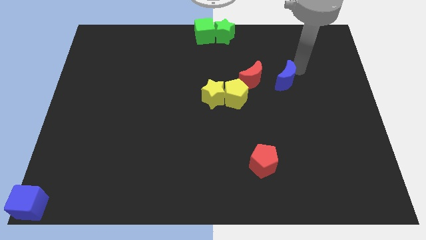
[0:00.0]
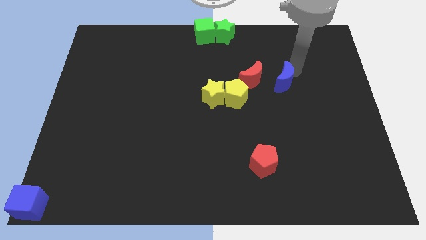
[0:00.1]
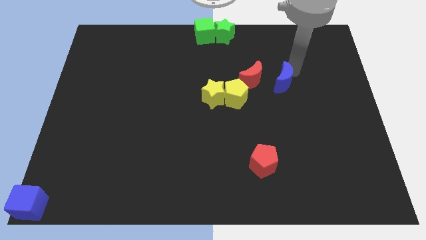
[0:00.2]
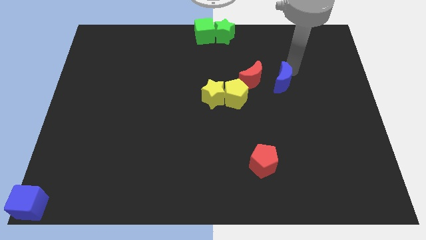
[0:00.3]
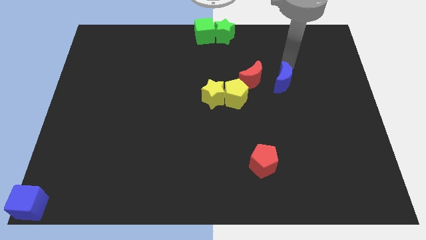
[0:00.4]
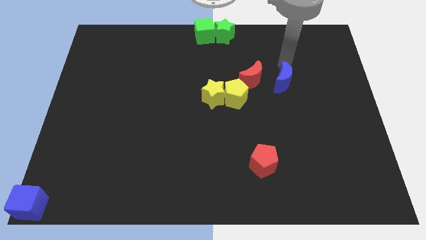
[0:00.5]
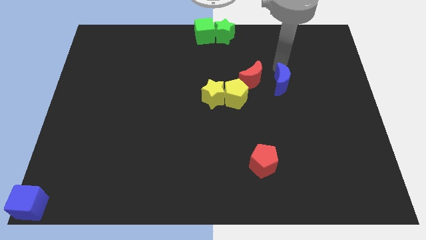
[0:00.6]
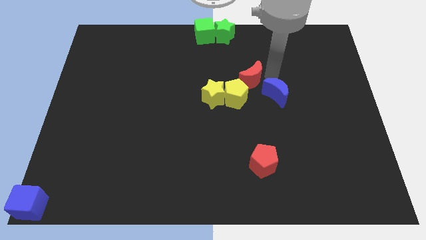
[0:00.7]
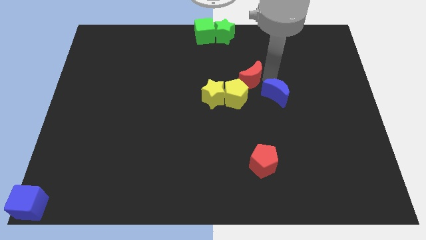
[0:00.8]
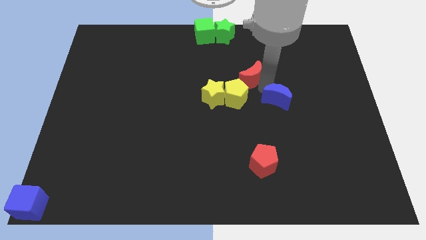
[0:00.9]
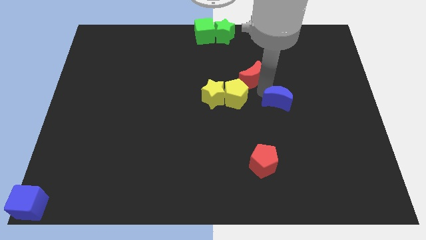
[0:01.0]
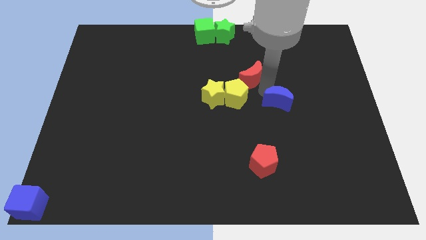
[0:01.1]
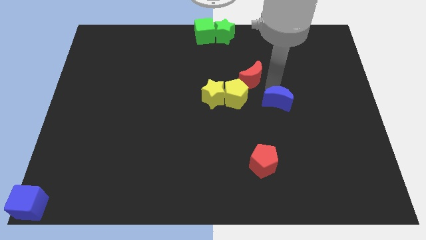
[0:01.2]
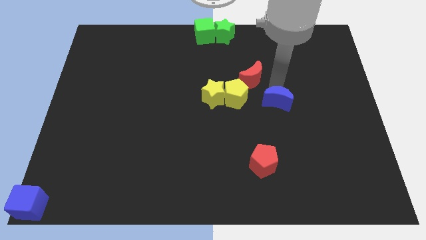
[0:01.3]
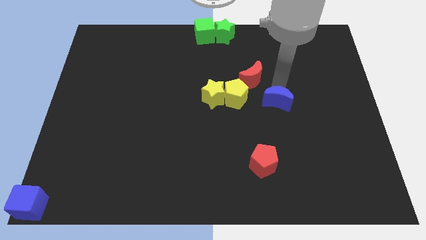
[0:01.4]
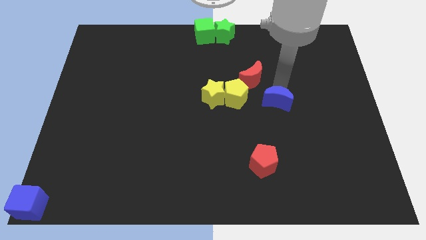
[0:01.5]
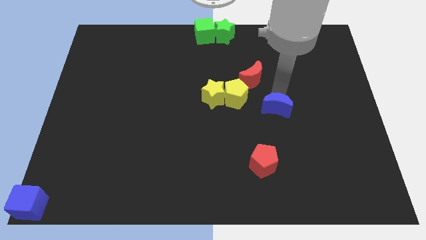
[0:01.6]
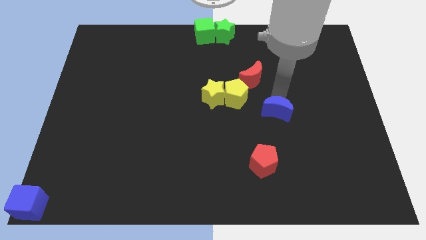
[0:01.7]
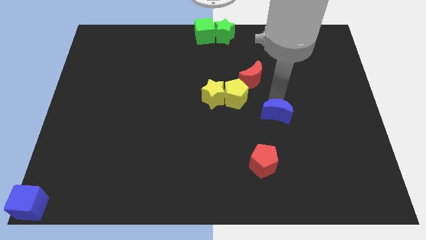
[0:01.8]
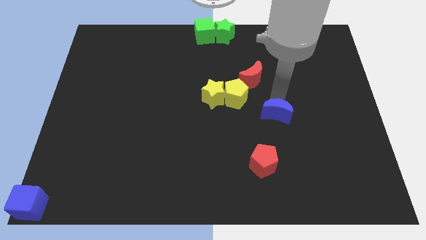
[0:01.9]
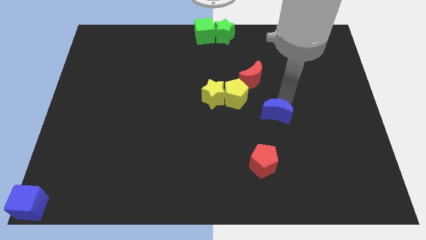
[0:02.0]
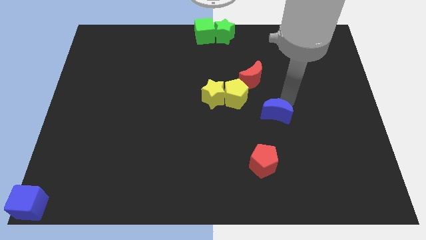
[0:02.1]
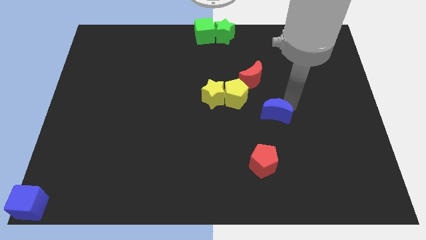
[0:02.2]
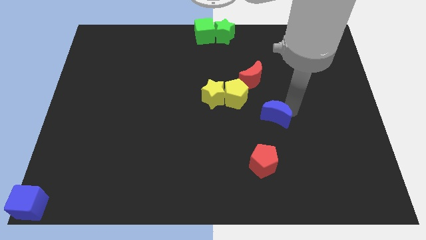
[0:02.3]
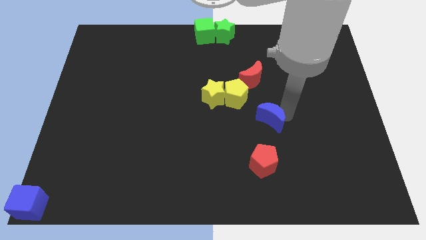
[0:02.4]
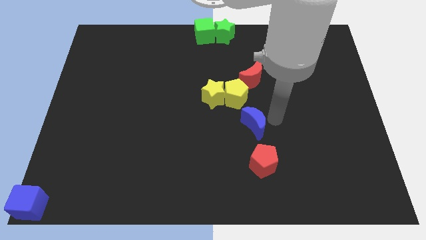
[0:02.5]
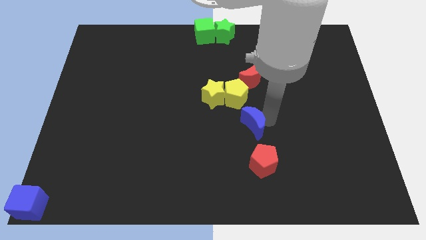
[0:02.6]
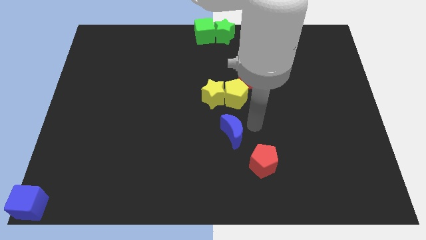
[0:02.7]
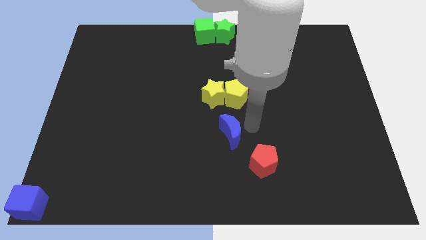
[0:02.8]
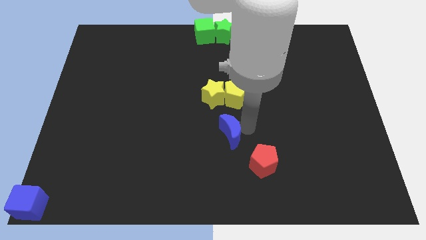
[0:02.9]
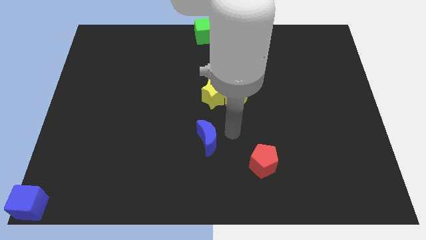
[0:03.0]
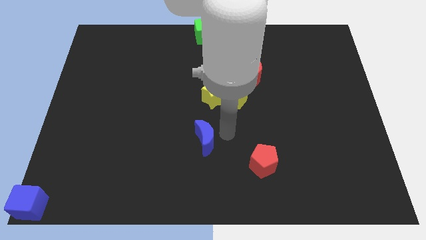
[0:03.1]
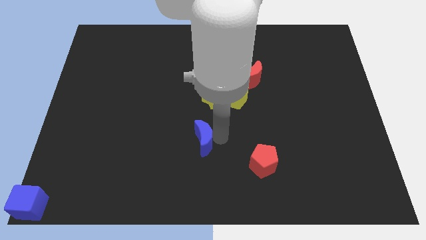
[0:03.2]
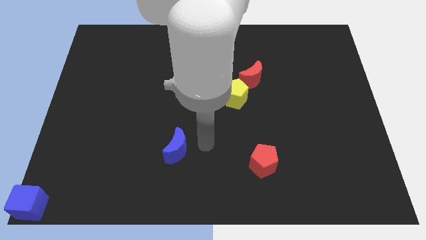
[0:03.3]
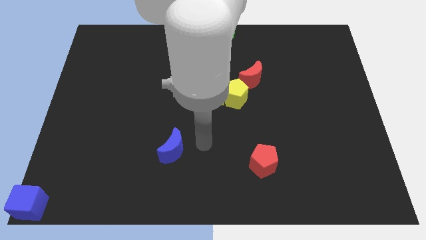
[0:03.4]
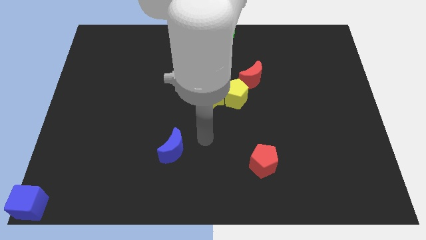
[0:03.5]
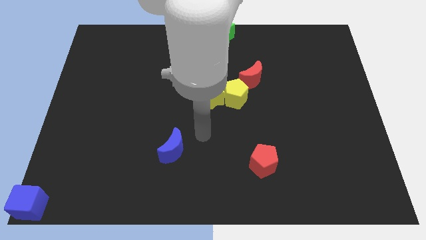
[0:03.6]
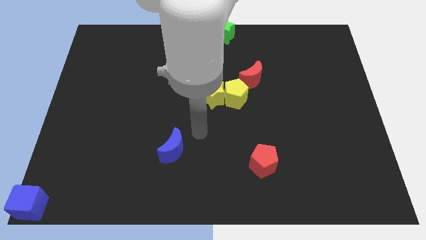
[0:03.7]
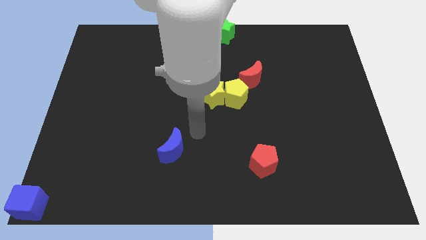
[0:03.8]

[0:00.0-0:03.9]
place the blue moon diagonally to yellow star

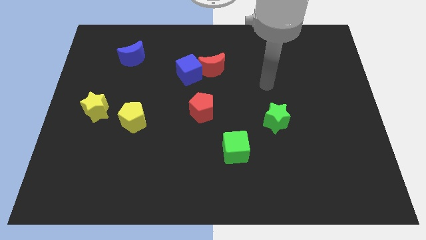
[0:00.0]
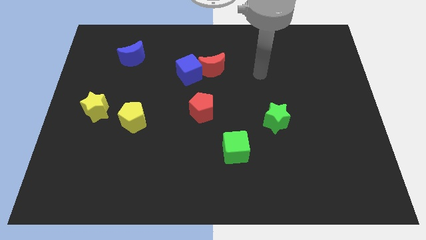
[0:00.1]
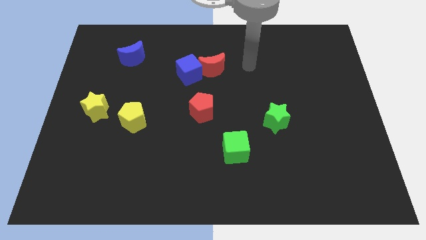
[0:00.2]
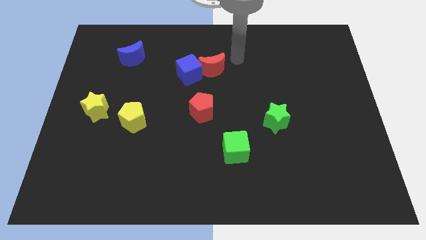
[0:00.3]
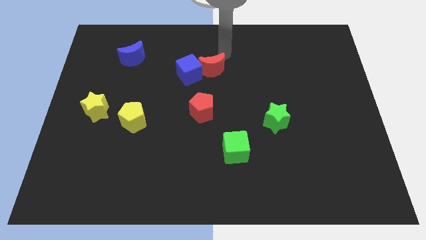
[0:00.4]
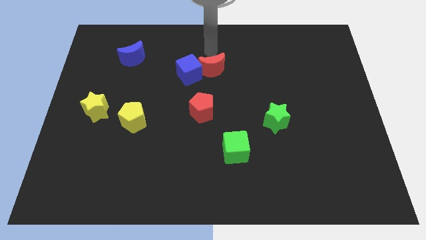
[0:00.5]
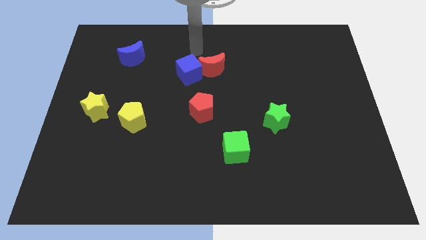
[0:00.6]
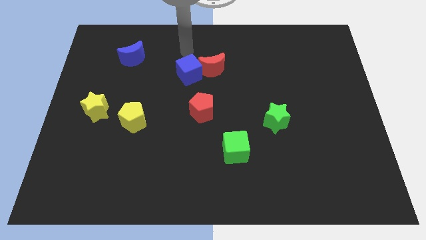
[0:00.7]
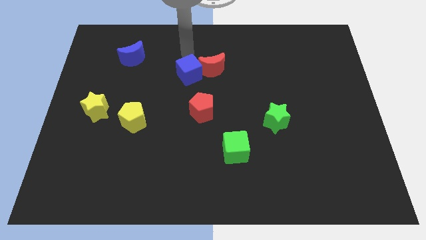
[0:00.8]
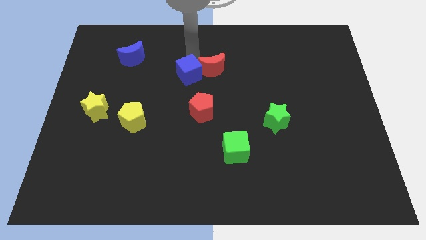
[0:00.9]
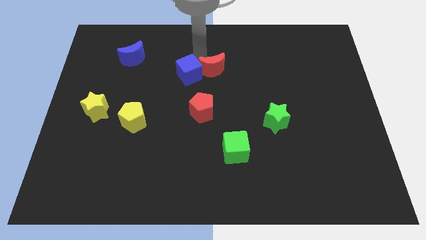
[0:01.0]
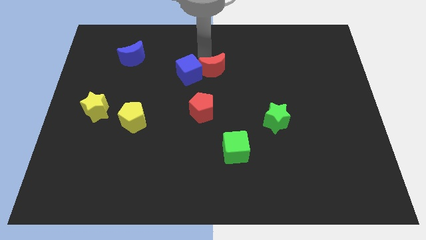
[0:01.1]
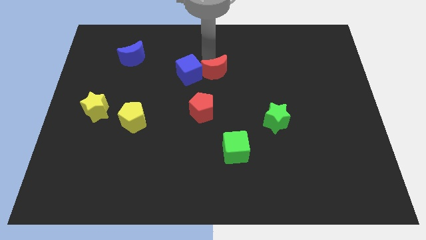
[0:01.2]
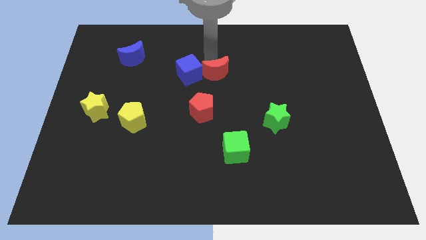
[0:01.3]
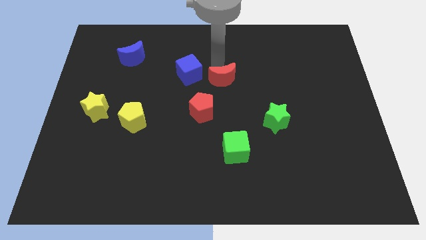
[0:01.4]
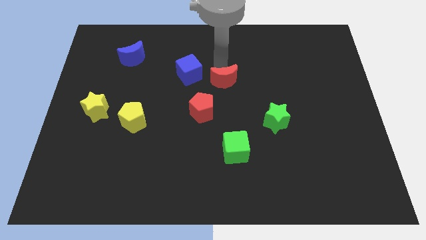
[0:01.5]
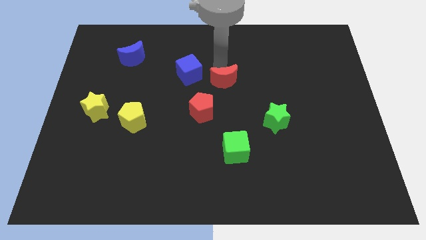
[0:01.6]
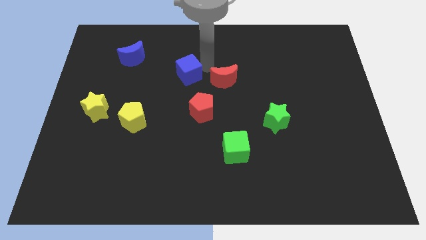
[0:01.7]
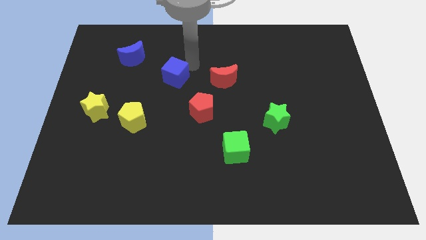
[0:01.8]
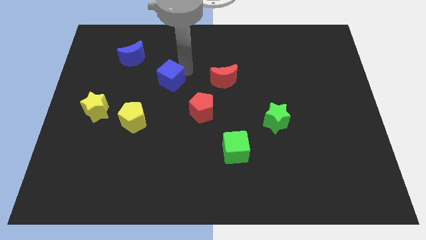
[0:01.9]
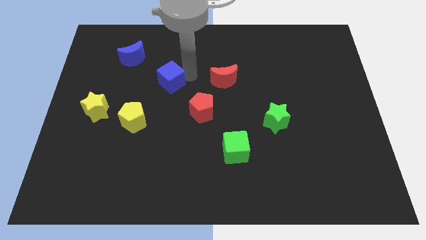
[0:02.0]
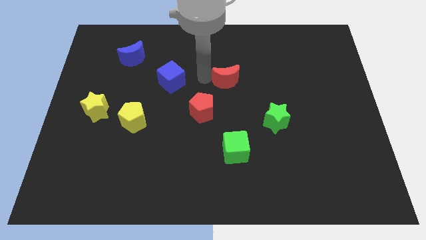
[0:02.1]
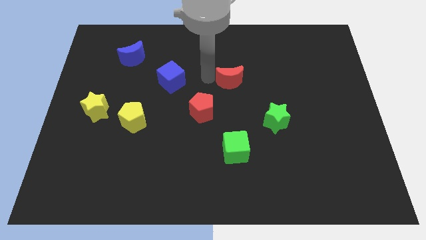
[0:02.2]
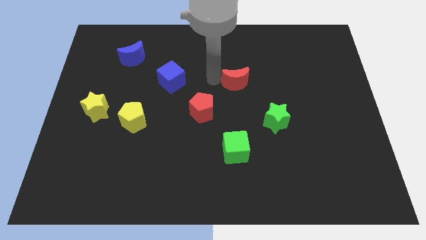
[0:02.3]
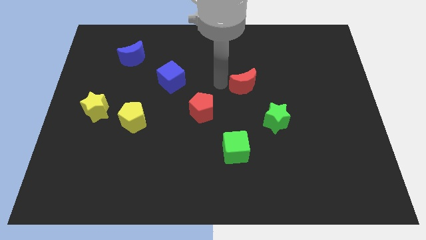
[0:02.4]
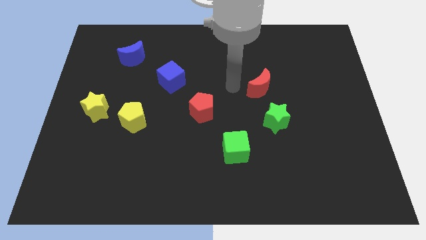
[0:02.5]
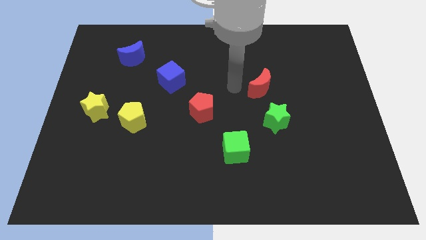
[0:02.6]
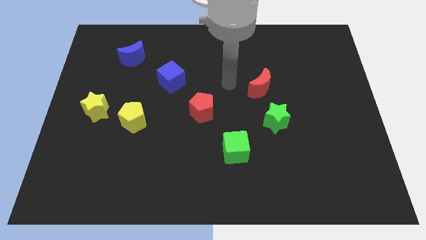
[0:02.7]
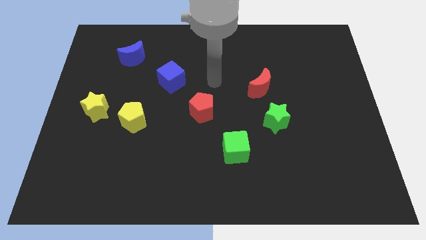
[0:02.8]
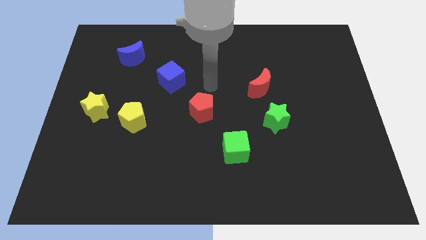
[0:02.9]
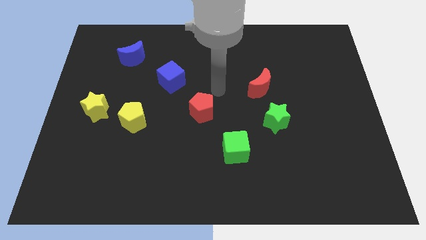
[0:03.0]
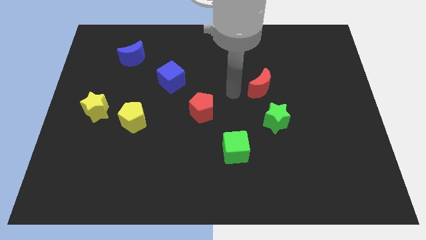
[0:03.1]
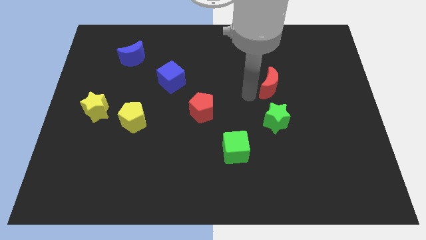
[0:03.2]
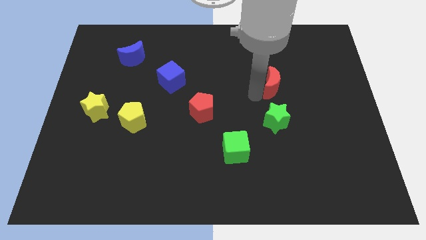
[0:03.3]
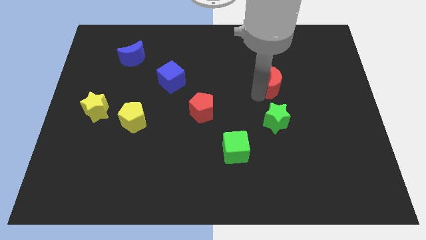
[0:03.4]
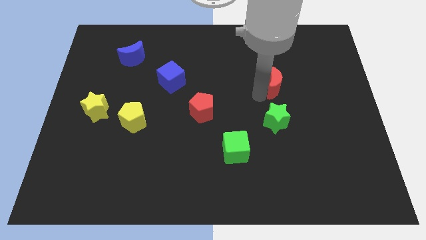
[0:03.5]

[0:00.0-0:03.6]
separate the bleu cube and red moon

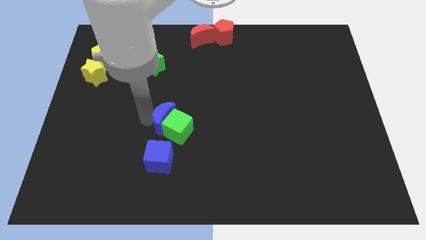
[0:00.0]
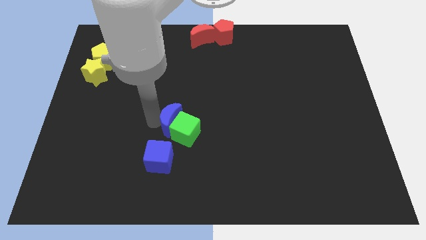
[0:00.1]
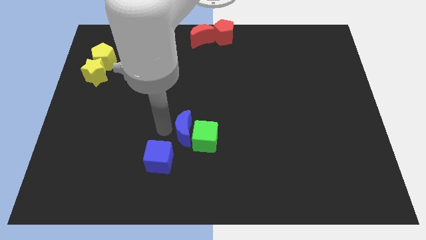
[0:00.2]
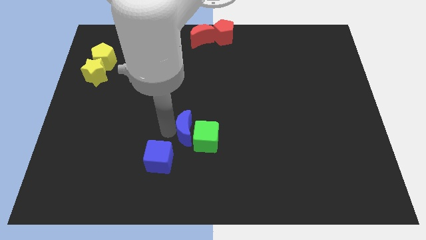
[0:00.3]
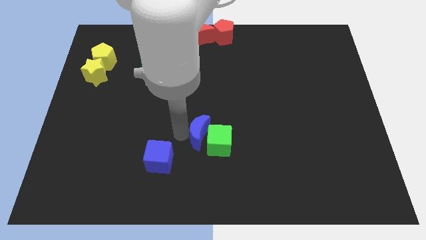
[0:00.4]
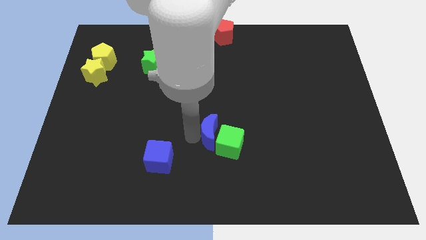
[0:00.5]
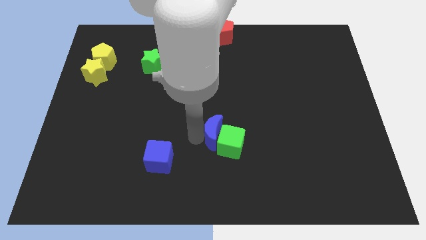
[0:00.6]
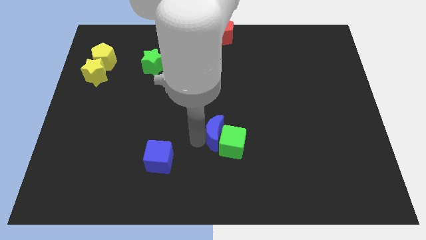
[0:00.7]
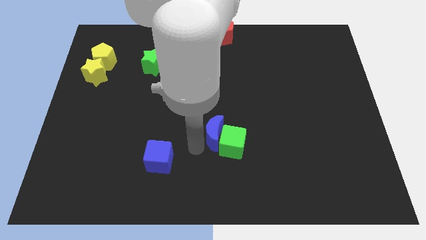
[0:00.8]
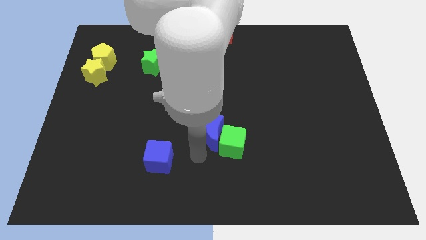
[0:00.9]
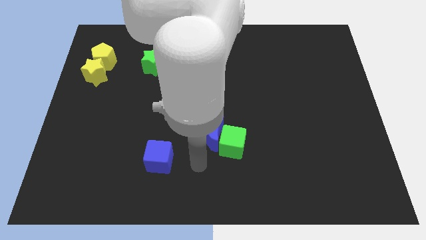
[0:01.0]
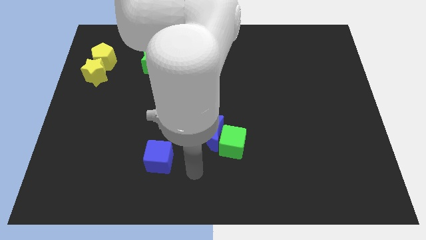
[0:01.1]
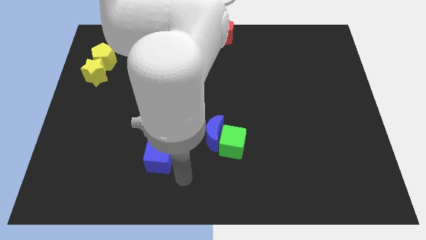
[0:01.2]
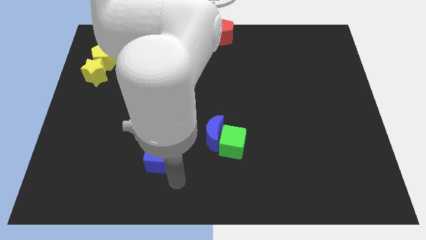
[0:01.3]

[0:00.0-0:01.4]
move the green cube and the blue crescent to the right of the board

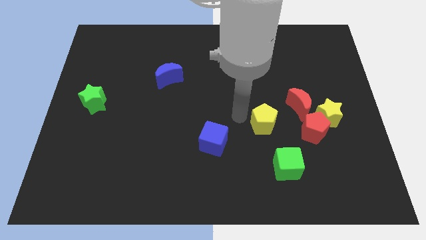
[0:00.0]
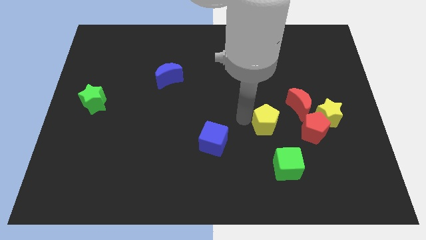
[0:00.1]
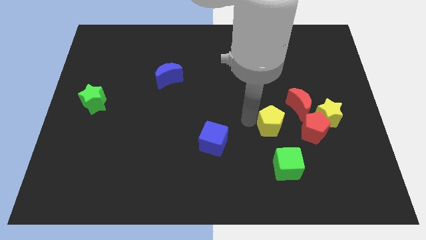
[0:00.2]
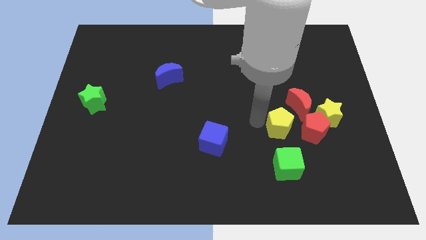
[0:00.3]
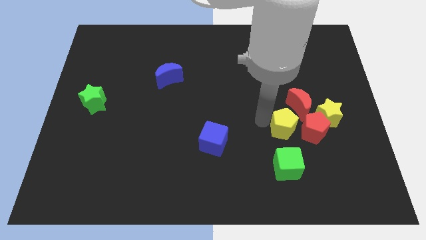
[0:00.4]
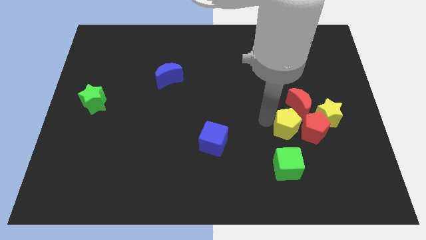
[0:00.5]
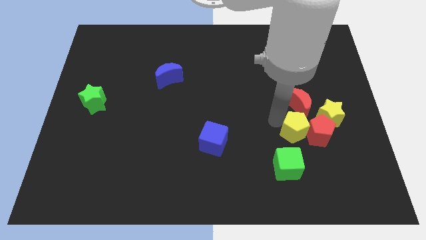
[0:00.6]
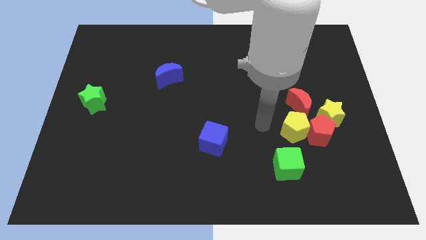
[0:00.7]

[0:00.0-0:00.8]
move the yellow pentagon to the left of the left side of the red pentagon
